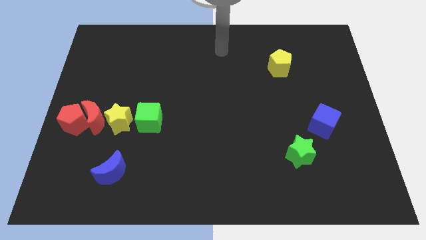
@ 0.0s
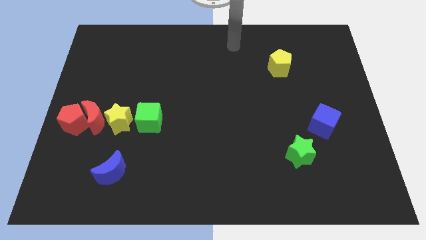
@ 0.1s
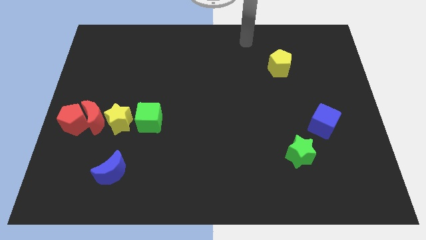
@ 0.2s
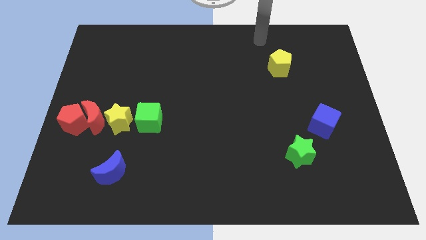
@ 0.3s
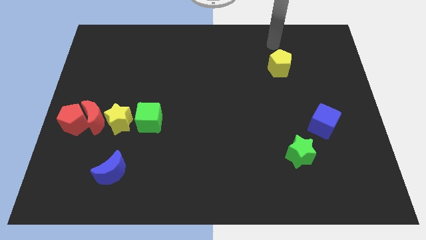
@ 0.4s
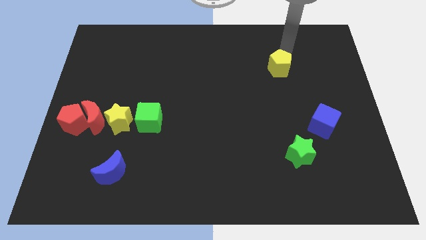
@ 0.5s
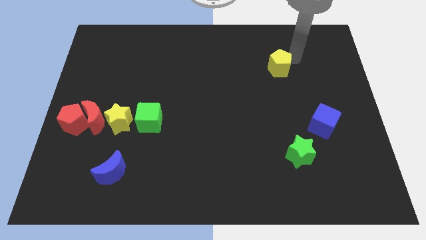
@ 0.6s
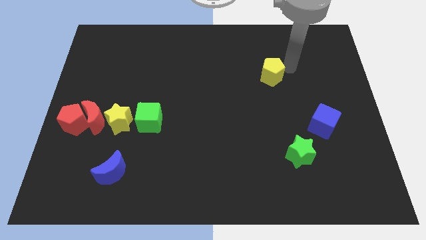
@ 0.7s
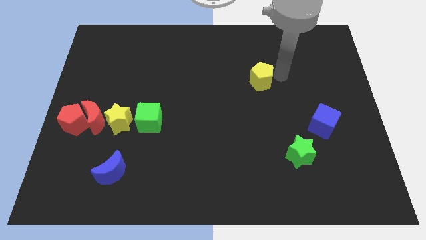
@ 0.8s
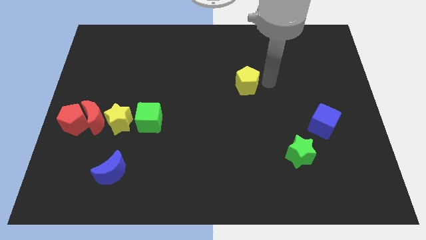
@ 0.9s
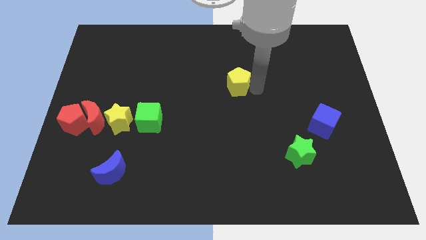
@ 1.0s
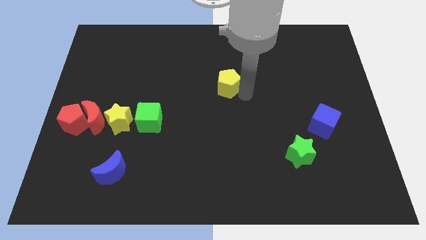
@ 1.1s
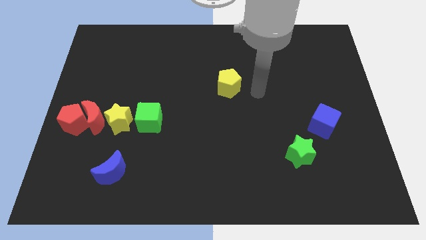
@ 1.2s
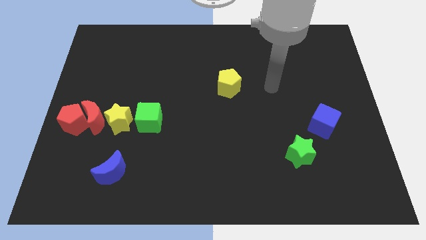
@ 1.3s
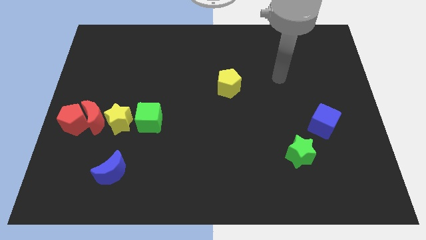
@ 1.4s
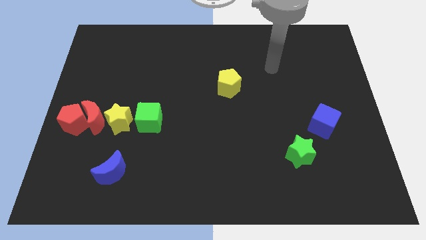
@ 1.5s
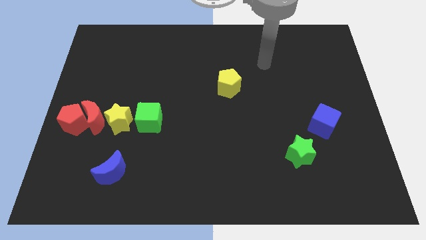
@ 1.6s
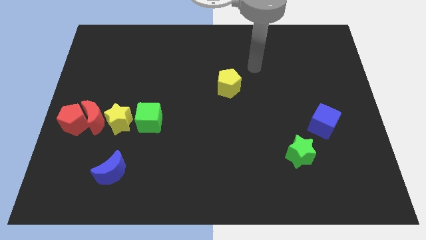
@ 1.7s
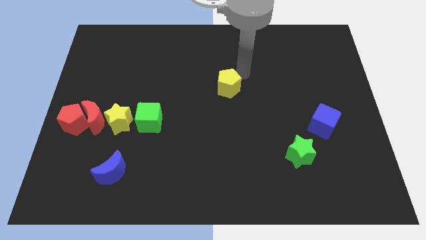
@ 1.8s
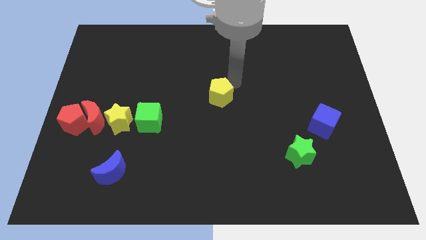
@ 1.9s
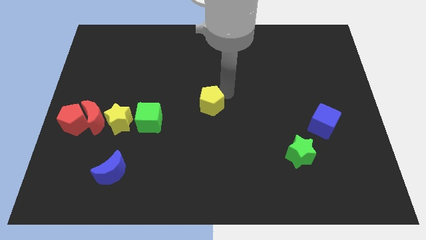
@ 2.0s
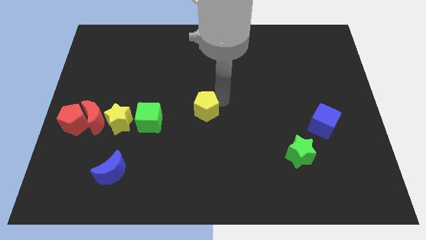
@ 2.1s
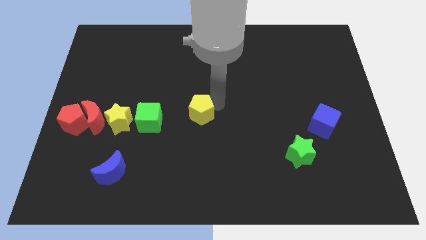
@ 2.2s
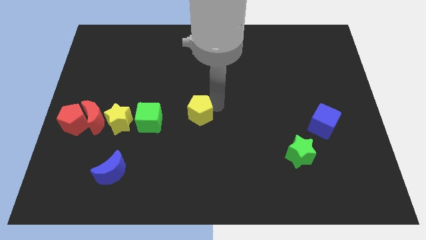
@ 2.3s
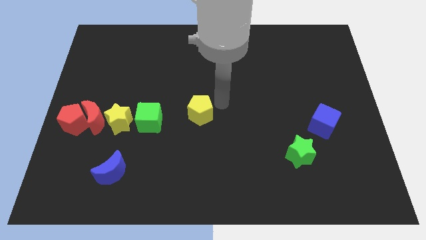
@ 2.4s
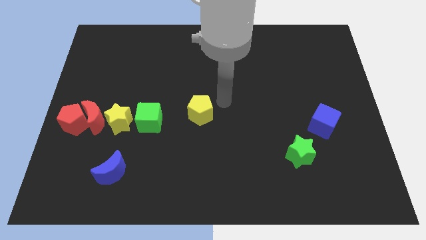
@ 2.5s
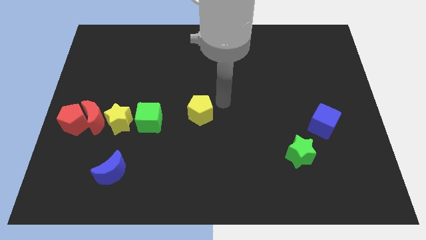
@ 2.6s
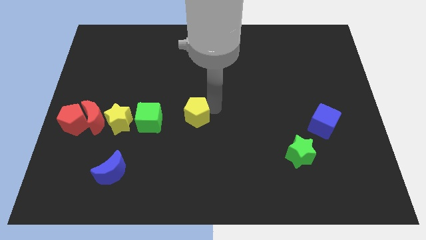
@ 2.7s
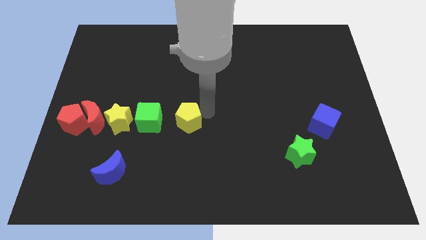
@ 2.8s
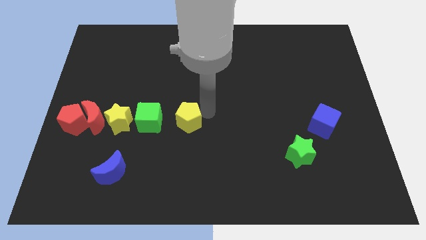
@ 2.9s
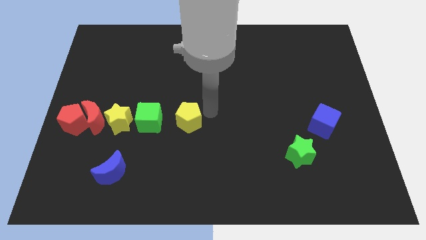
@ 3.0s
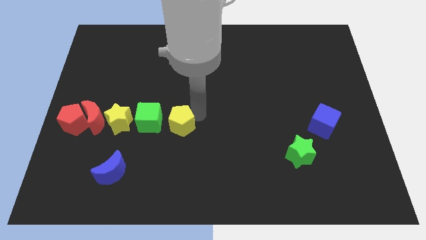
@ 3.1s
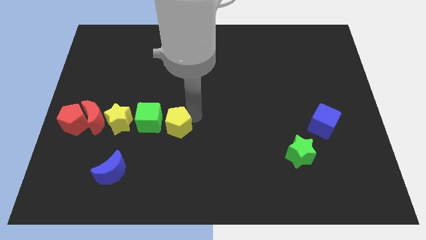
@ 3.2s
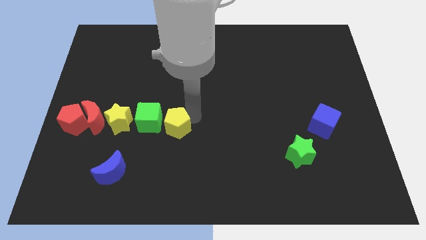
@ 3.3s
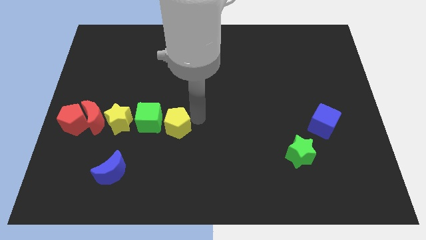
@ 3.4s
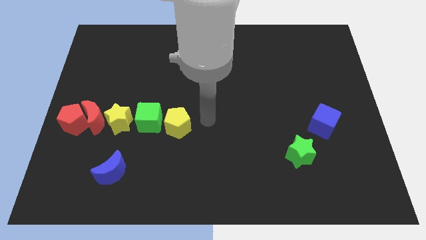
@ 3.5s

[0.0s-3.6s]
move the yellow pentagon to the right side of the green cube

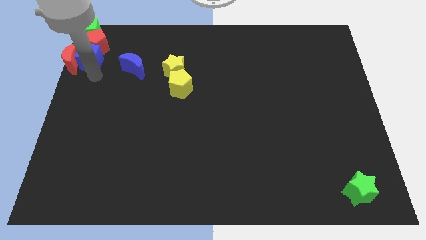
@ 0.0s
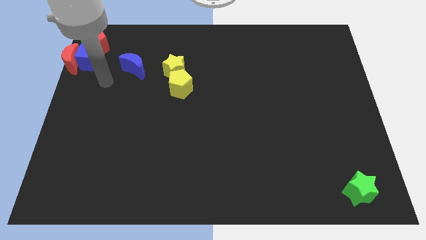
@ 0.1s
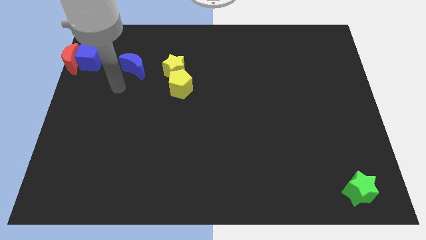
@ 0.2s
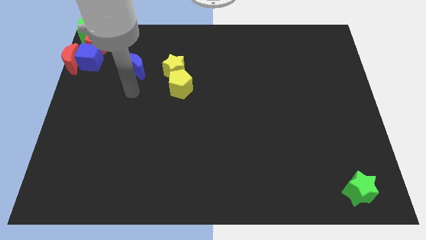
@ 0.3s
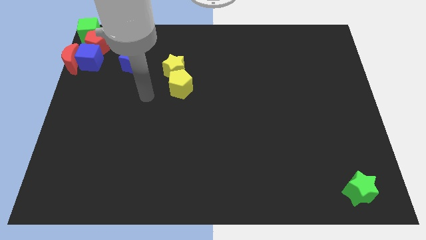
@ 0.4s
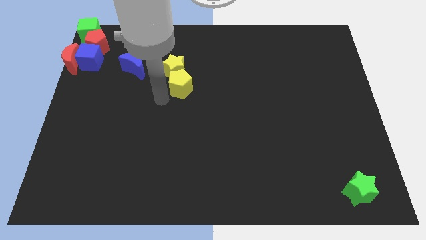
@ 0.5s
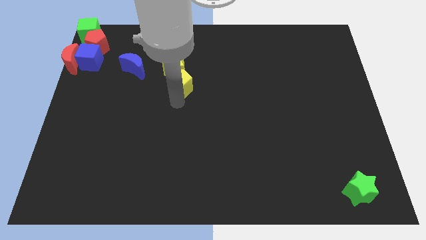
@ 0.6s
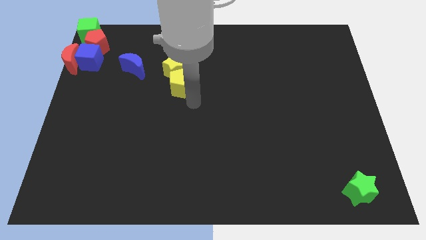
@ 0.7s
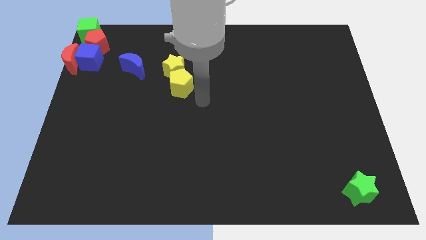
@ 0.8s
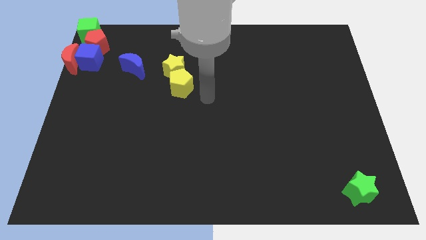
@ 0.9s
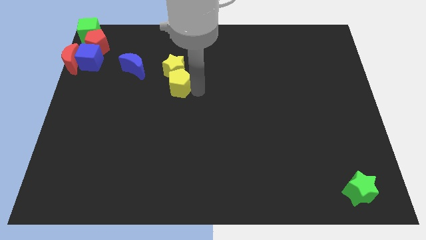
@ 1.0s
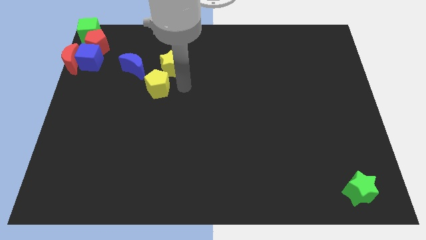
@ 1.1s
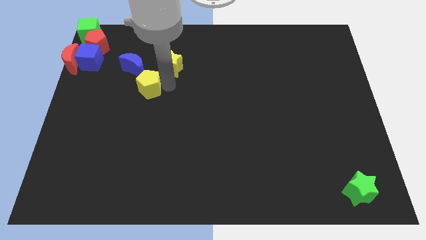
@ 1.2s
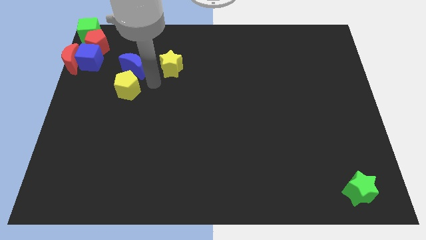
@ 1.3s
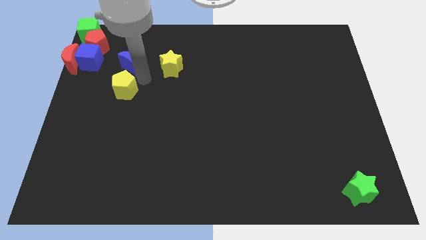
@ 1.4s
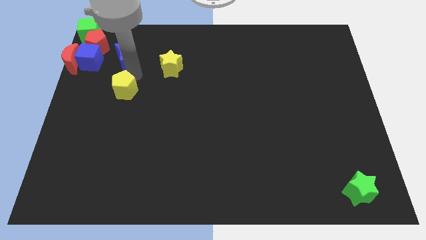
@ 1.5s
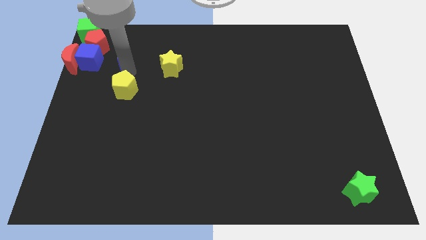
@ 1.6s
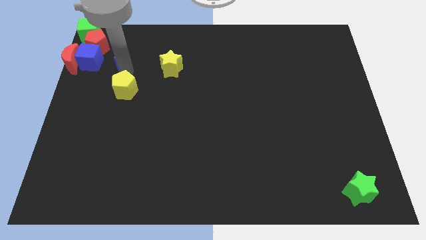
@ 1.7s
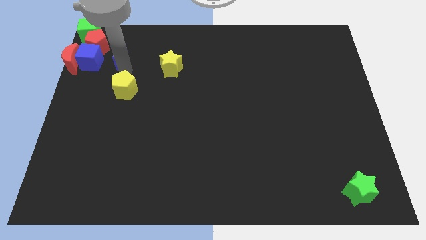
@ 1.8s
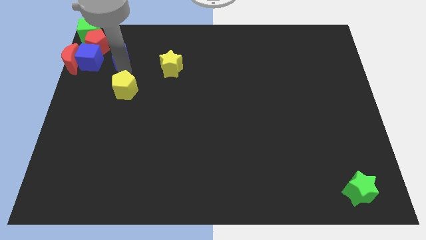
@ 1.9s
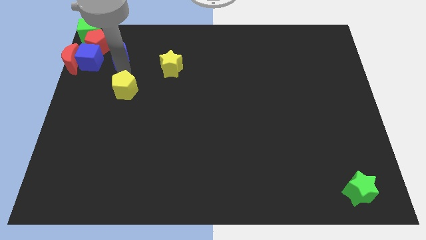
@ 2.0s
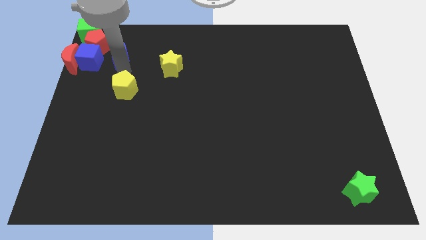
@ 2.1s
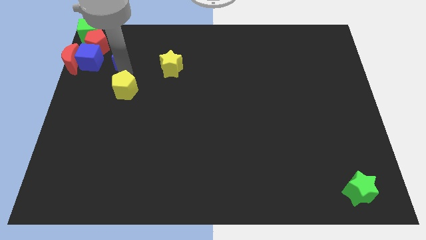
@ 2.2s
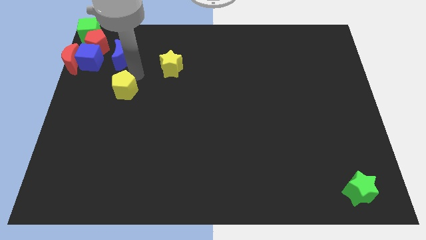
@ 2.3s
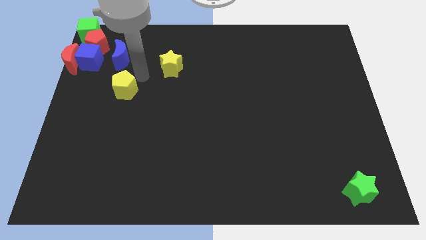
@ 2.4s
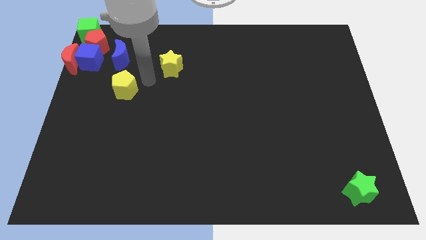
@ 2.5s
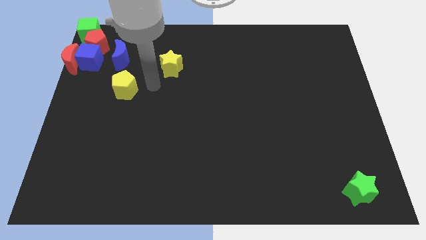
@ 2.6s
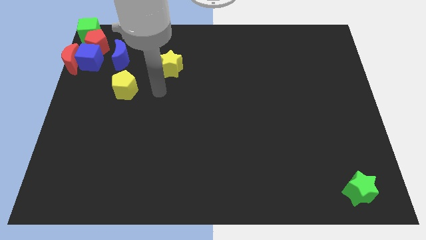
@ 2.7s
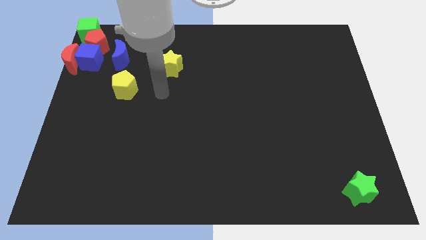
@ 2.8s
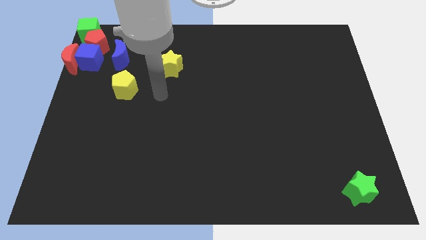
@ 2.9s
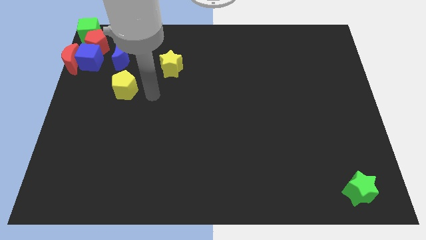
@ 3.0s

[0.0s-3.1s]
separate the yellow pentagon from the yellow star

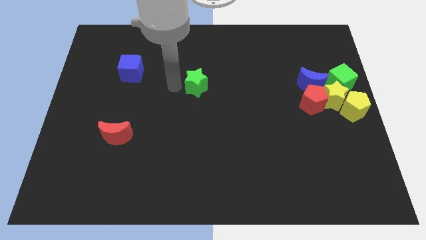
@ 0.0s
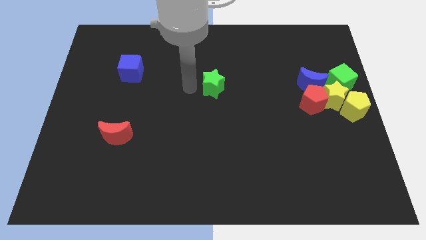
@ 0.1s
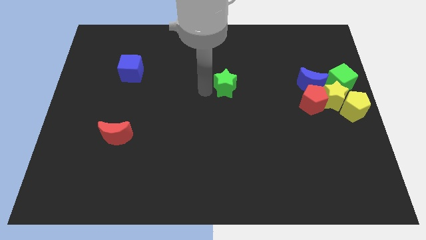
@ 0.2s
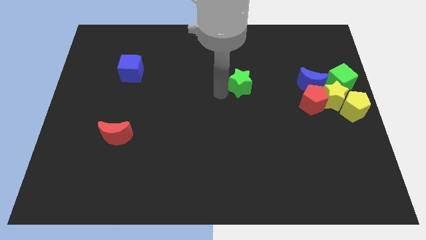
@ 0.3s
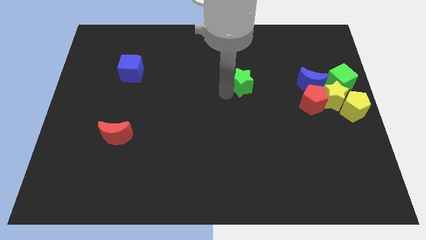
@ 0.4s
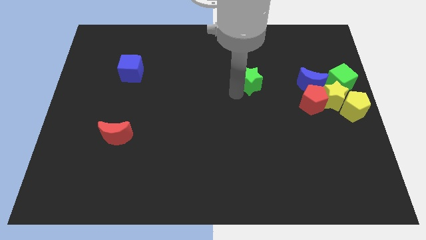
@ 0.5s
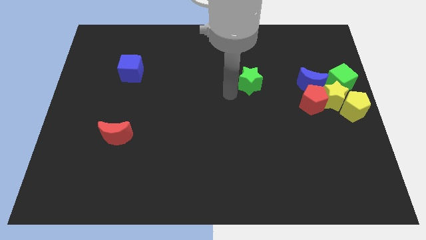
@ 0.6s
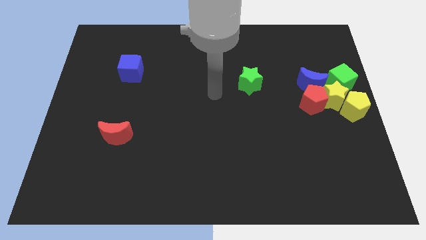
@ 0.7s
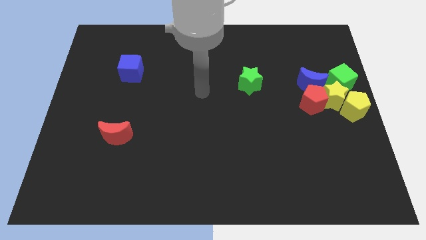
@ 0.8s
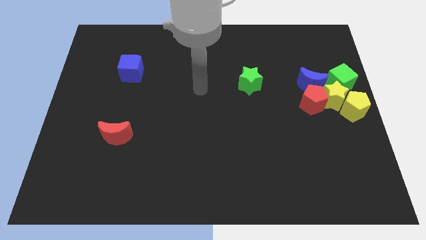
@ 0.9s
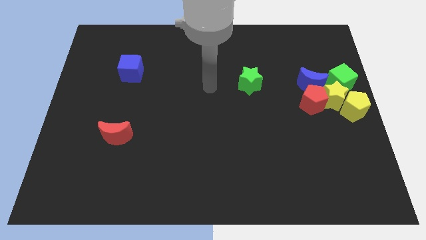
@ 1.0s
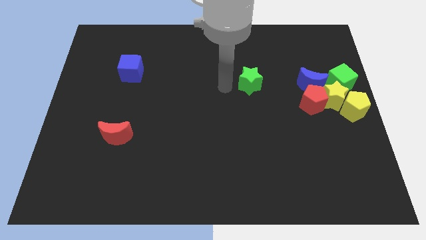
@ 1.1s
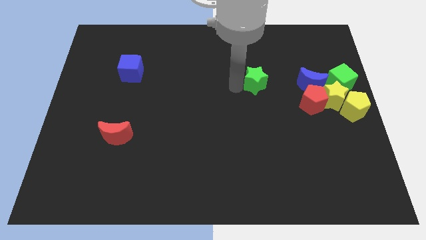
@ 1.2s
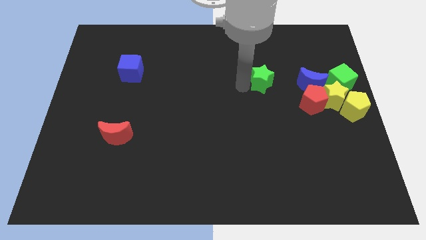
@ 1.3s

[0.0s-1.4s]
move the green star to the right

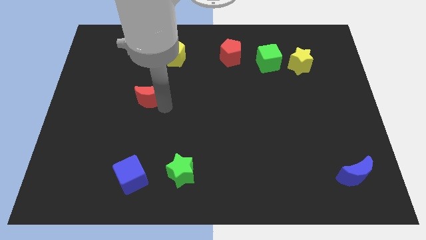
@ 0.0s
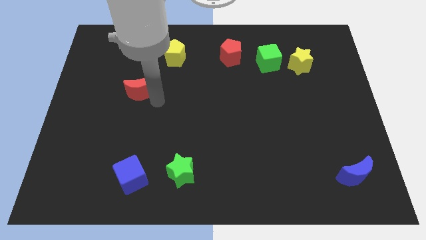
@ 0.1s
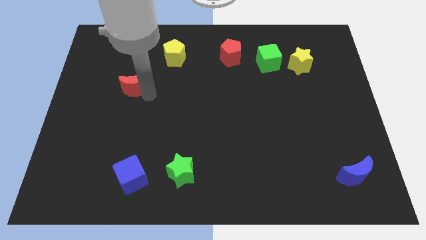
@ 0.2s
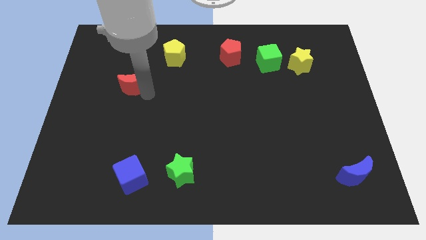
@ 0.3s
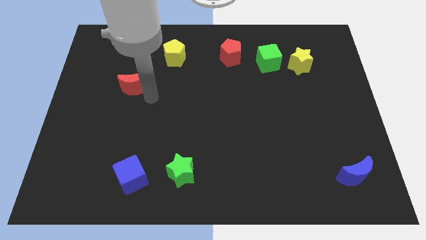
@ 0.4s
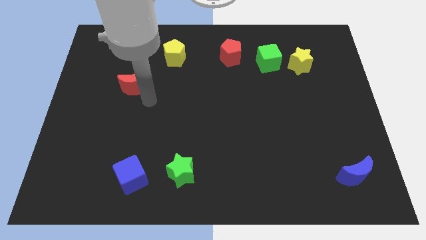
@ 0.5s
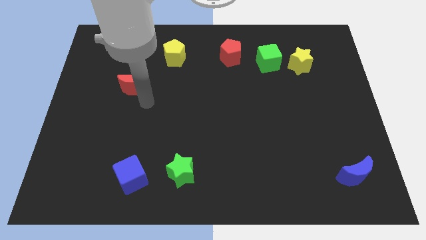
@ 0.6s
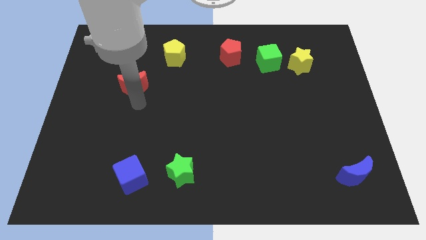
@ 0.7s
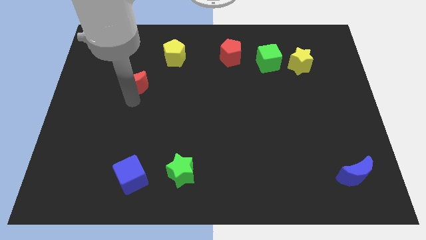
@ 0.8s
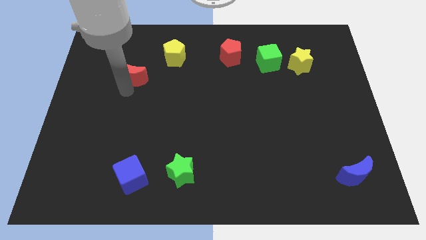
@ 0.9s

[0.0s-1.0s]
place the red moon diagonally bottom left to the yellow pentagon

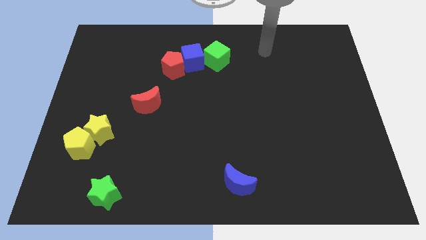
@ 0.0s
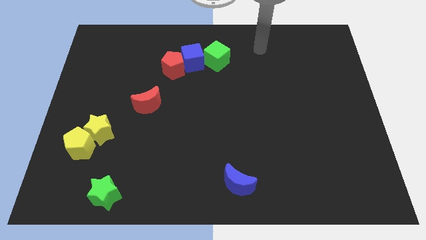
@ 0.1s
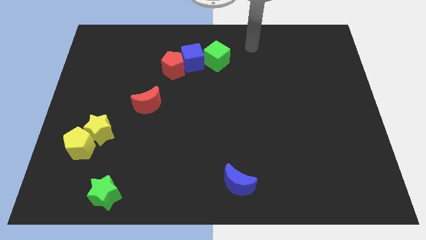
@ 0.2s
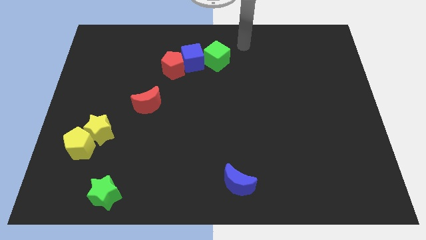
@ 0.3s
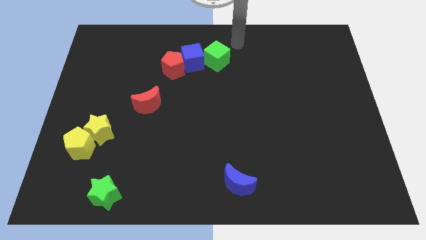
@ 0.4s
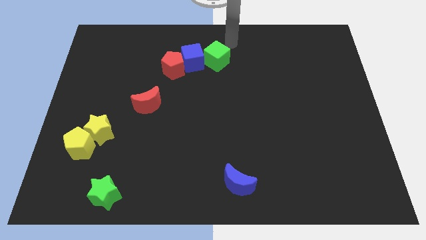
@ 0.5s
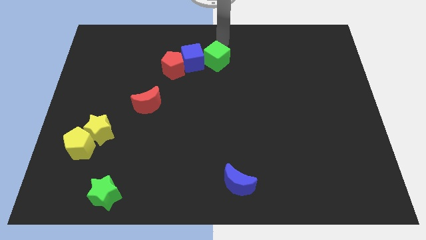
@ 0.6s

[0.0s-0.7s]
put arm at the center top
